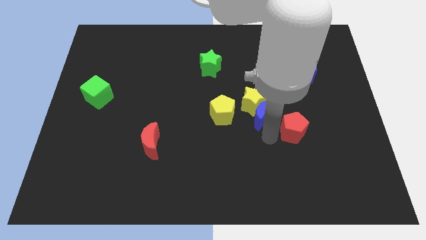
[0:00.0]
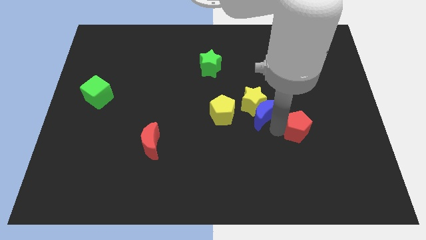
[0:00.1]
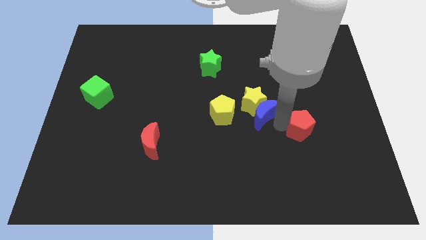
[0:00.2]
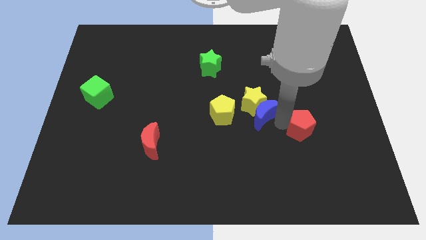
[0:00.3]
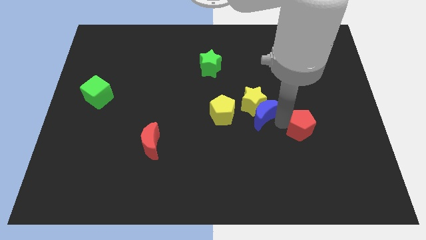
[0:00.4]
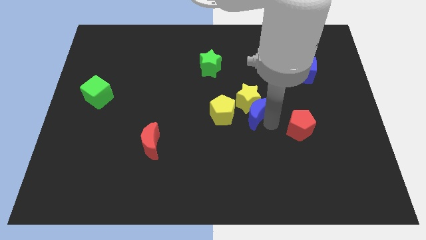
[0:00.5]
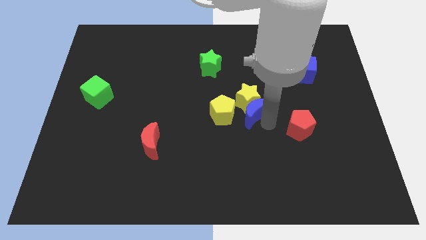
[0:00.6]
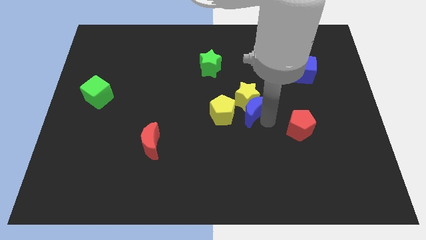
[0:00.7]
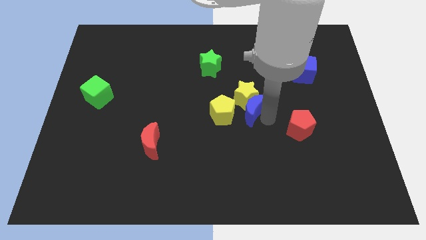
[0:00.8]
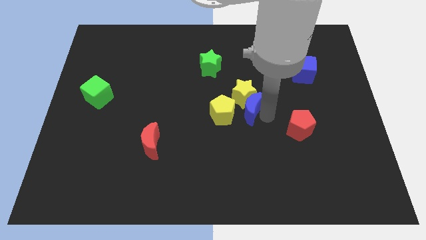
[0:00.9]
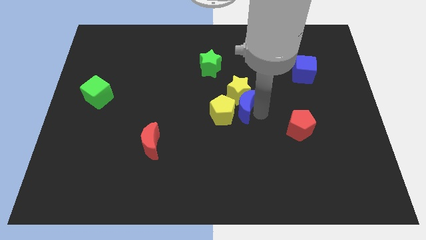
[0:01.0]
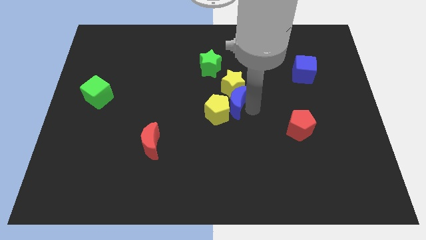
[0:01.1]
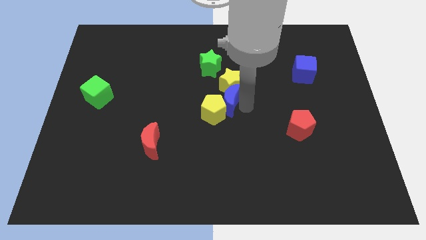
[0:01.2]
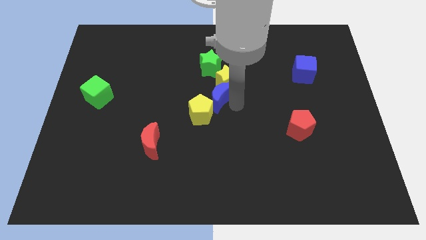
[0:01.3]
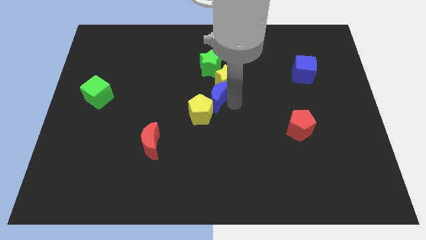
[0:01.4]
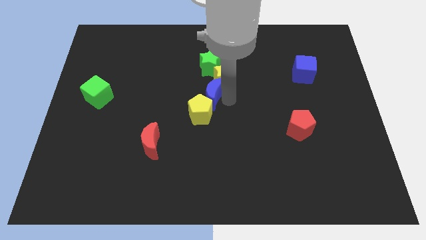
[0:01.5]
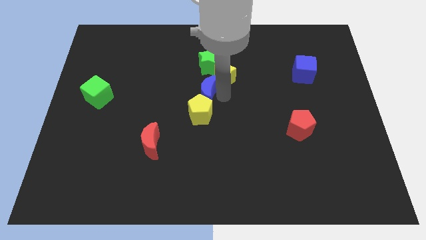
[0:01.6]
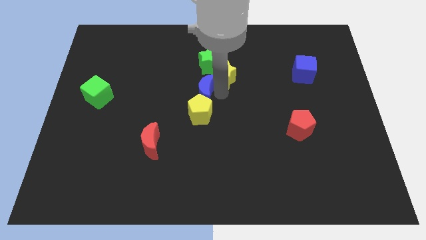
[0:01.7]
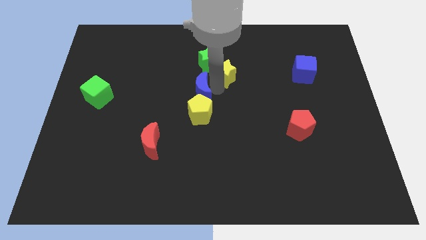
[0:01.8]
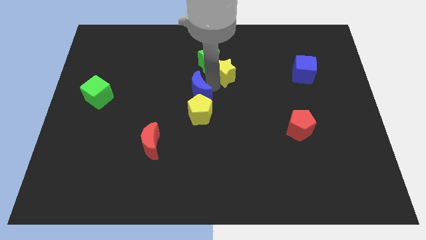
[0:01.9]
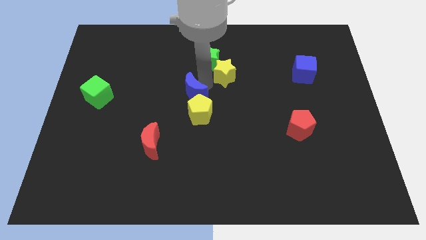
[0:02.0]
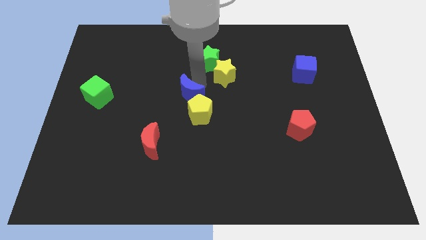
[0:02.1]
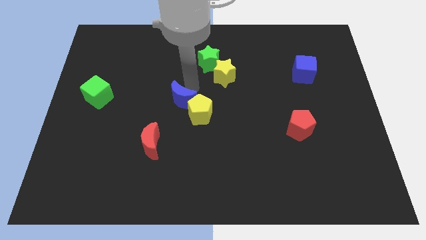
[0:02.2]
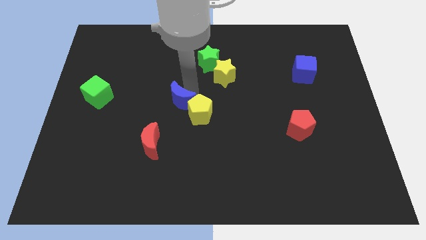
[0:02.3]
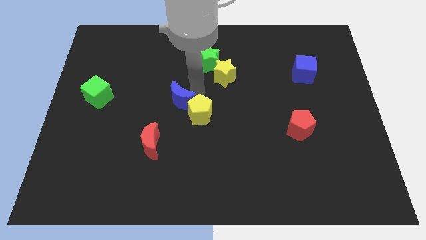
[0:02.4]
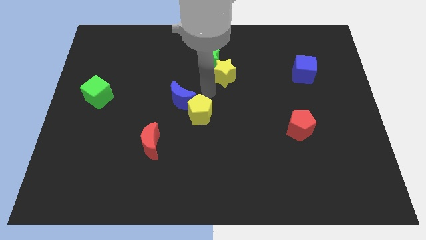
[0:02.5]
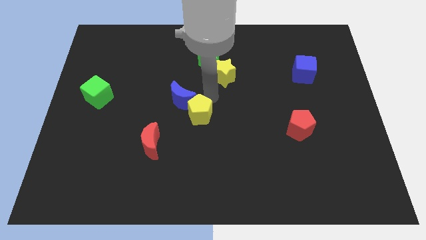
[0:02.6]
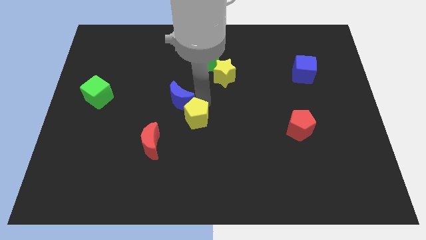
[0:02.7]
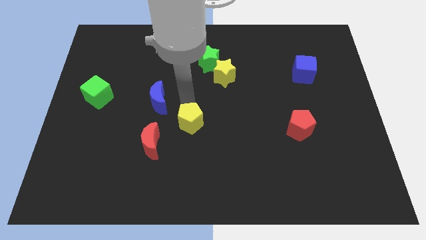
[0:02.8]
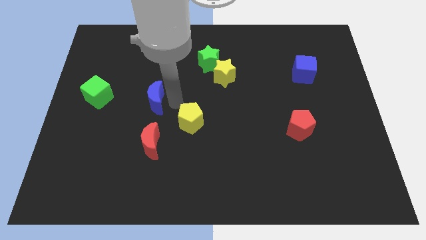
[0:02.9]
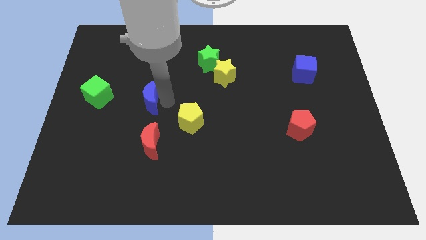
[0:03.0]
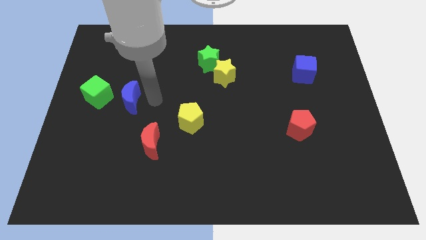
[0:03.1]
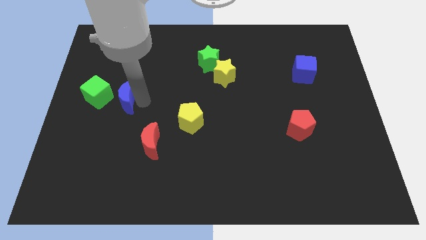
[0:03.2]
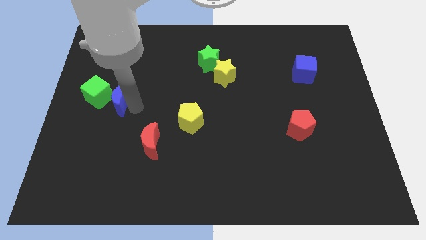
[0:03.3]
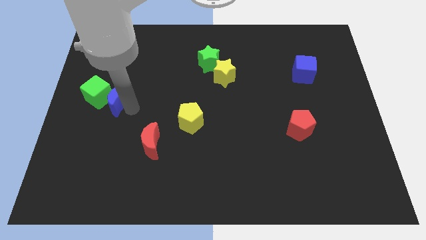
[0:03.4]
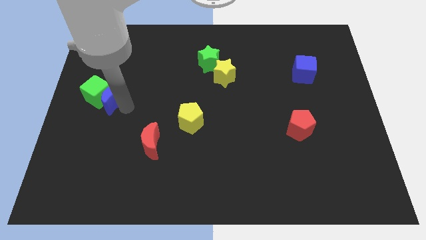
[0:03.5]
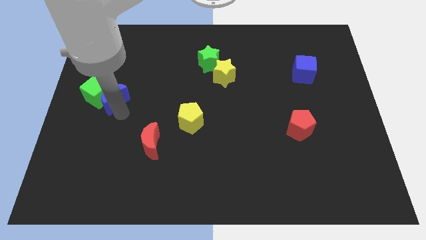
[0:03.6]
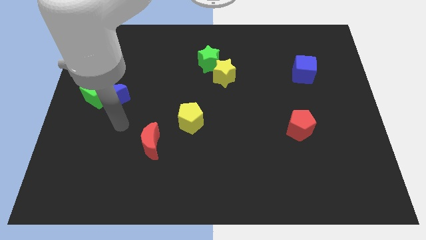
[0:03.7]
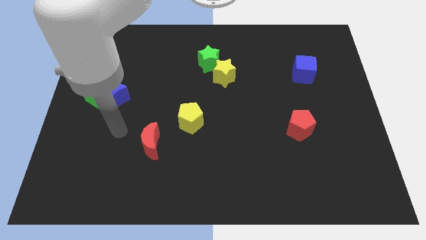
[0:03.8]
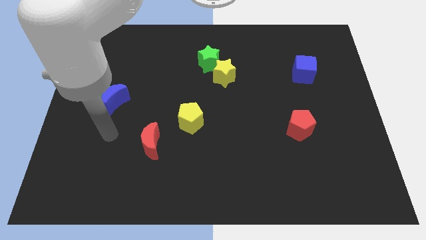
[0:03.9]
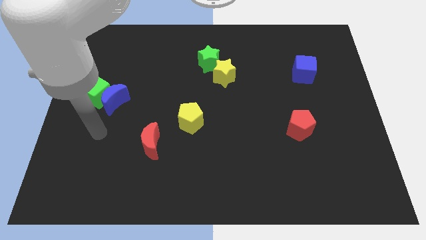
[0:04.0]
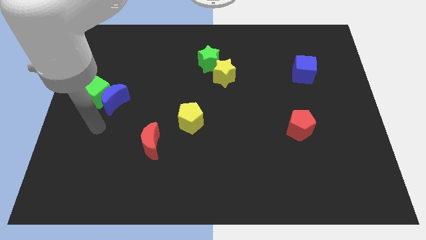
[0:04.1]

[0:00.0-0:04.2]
place the blue moon in between the green cube and yellow pentagon

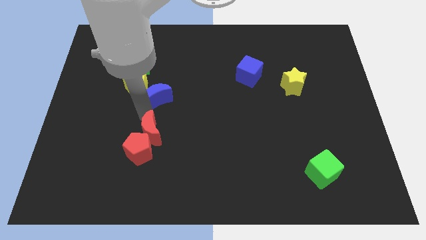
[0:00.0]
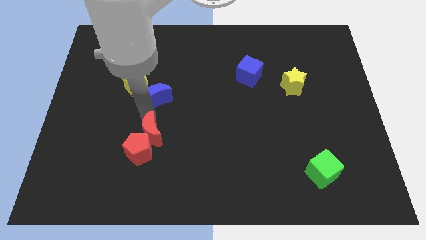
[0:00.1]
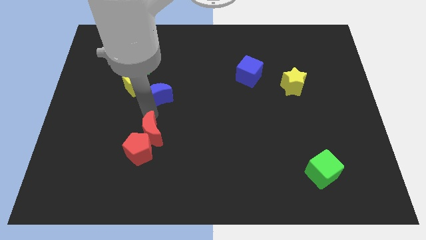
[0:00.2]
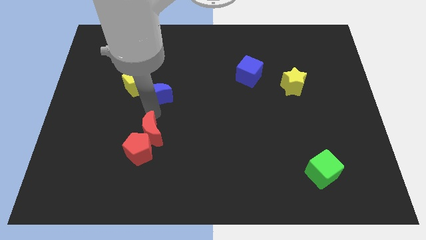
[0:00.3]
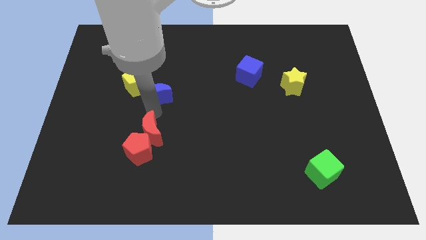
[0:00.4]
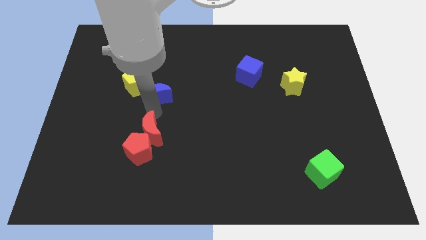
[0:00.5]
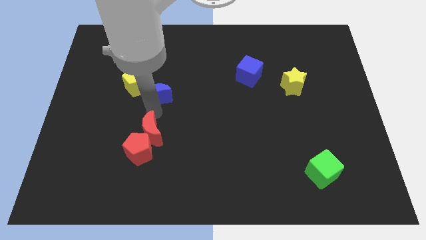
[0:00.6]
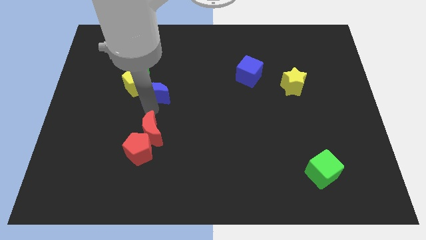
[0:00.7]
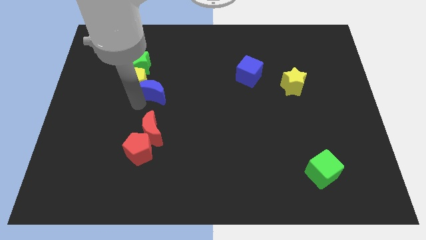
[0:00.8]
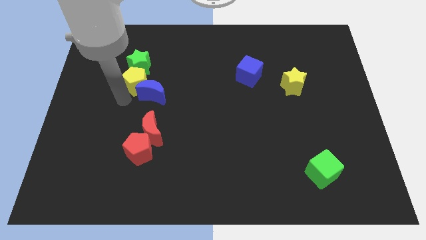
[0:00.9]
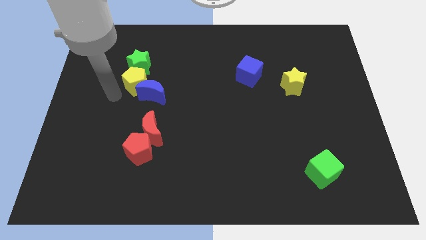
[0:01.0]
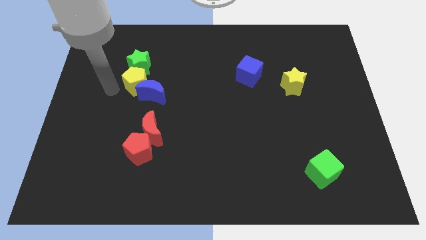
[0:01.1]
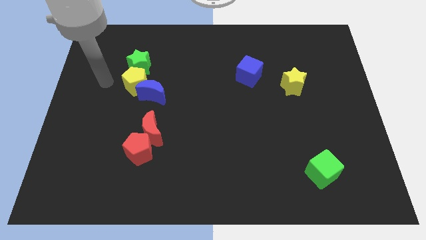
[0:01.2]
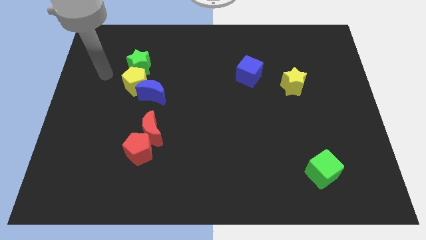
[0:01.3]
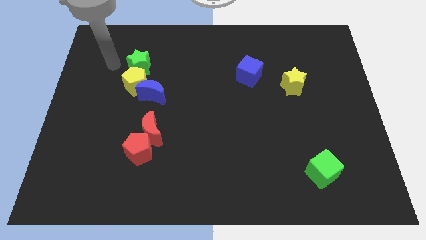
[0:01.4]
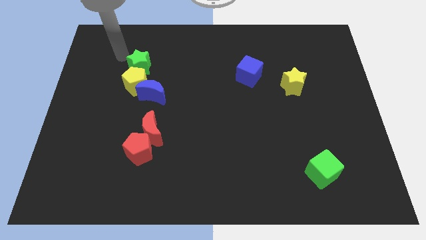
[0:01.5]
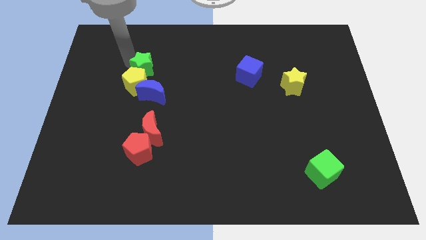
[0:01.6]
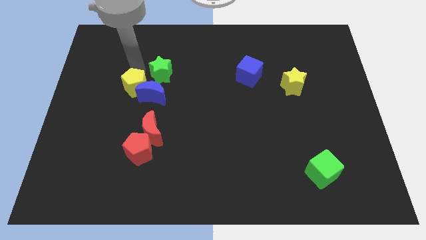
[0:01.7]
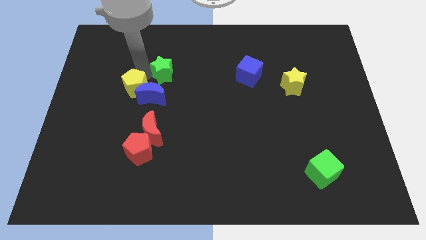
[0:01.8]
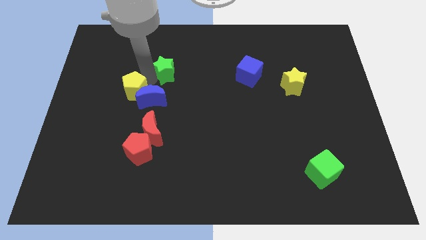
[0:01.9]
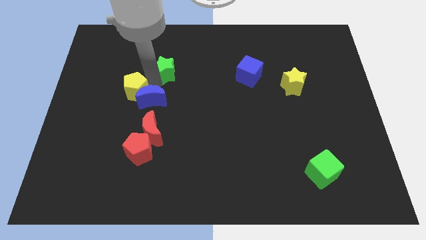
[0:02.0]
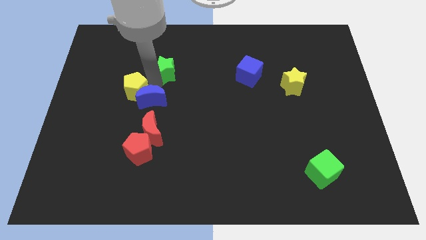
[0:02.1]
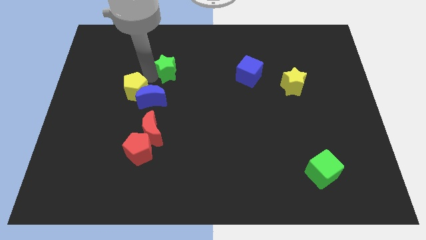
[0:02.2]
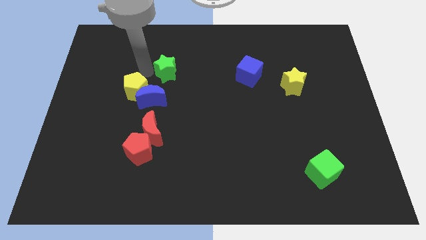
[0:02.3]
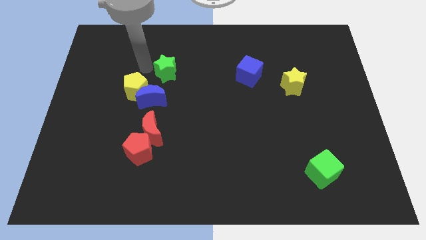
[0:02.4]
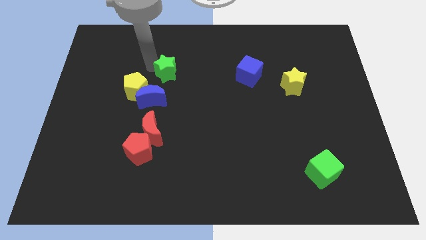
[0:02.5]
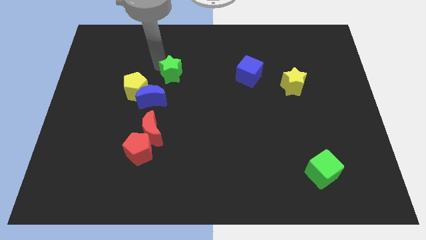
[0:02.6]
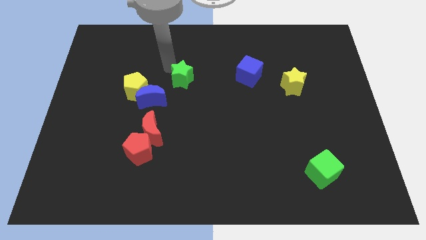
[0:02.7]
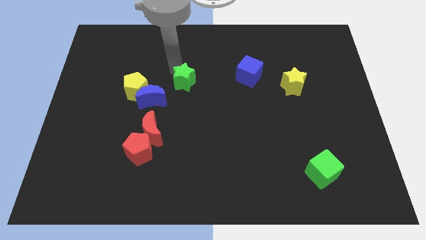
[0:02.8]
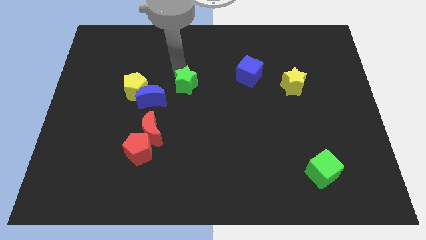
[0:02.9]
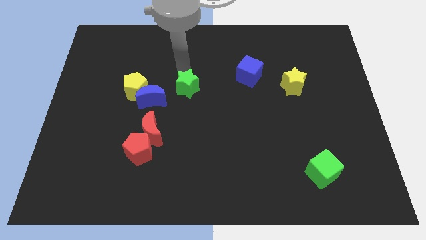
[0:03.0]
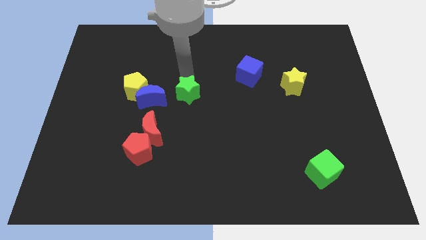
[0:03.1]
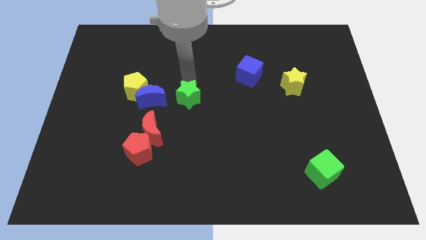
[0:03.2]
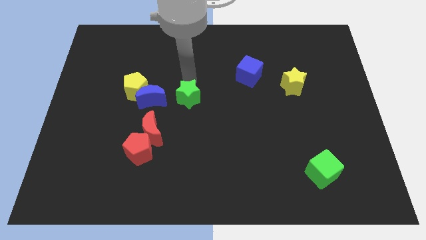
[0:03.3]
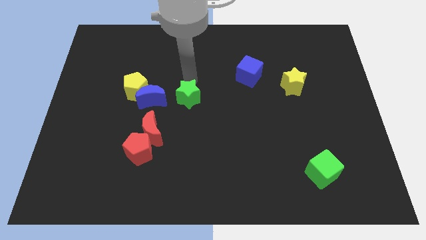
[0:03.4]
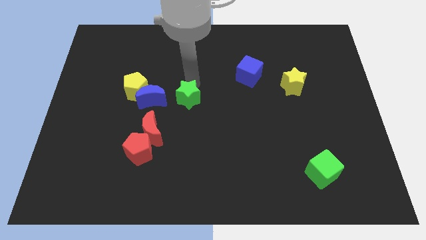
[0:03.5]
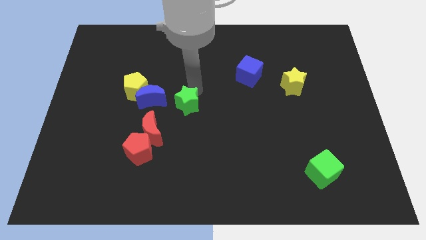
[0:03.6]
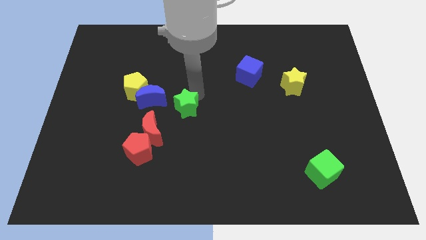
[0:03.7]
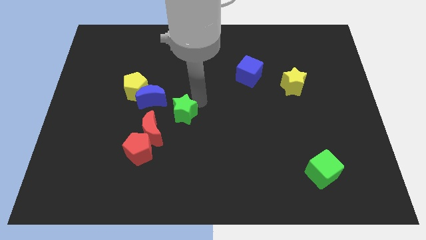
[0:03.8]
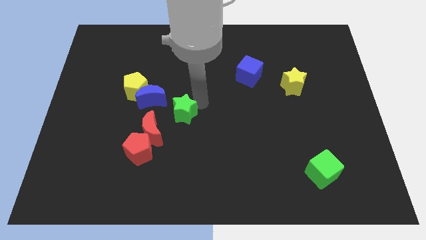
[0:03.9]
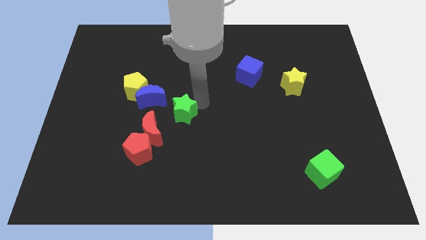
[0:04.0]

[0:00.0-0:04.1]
drag the green star slightly downwards

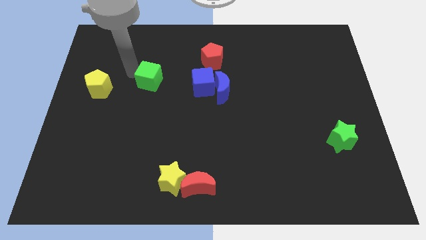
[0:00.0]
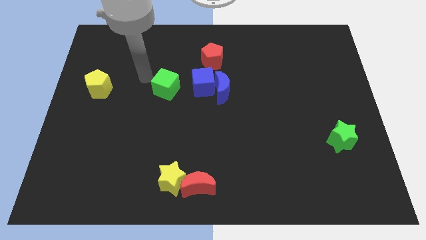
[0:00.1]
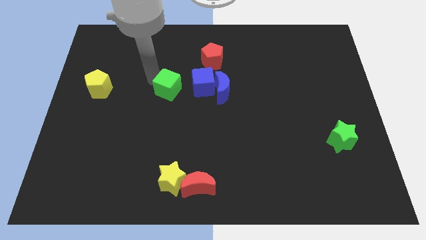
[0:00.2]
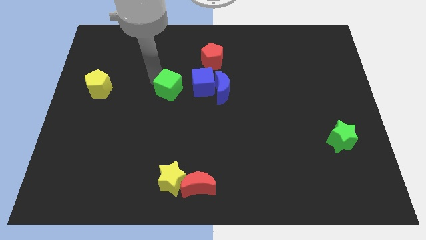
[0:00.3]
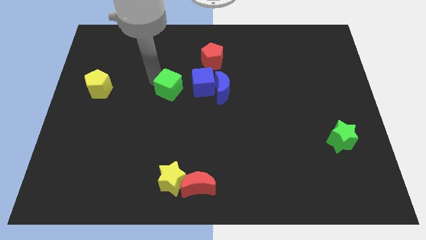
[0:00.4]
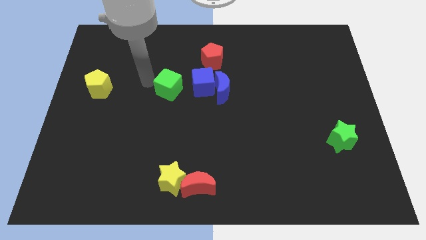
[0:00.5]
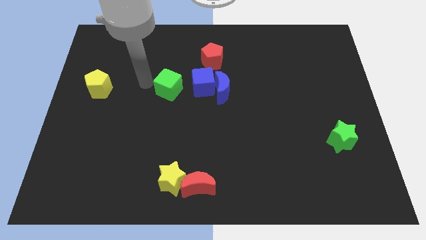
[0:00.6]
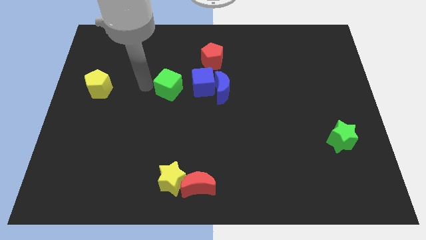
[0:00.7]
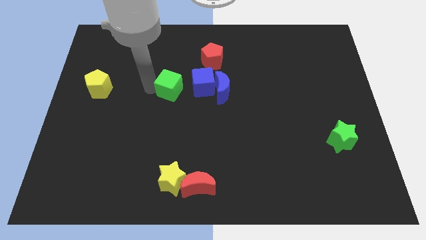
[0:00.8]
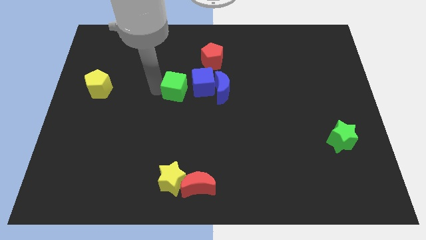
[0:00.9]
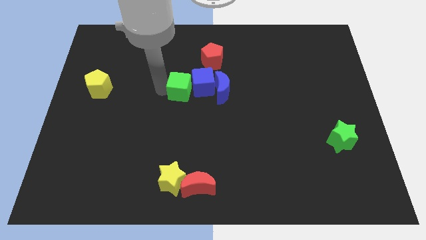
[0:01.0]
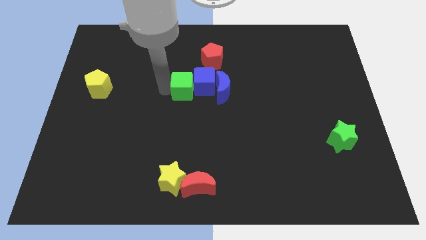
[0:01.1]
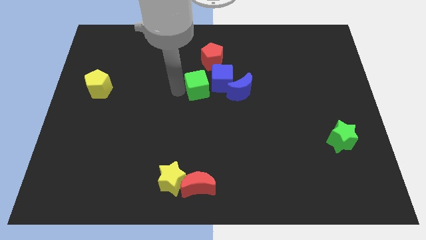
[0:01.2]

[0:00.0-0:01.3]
push the green cube into the left side of the blue cube
